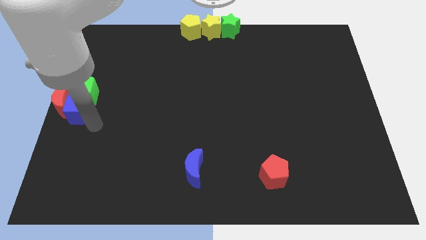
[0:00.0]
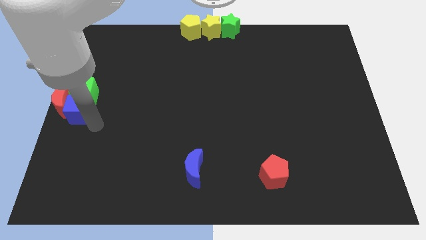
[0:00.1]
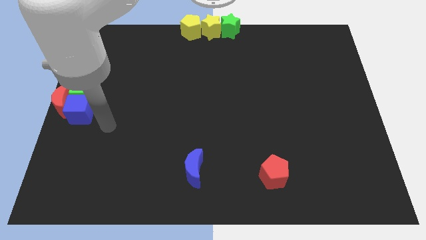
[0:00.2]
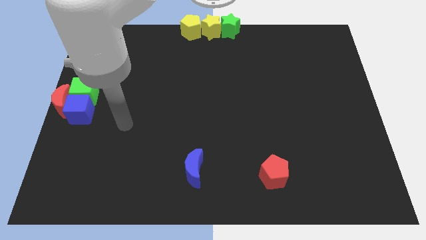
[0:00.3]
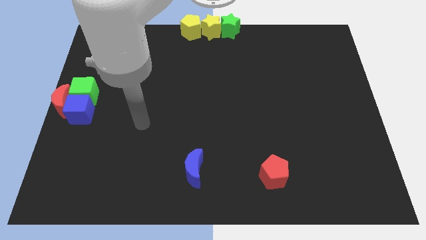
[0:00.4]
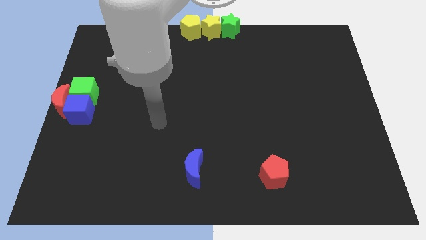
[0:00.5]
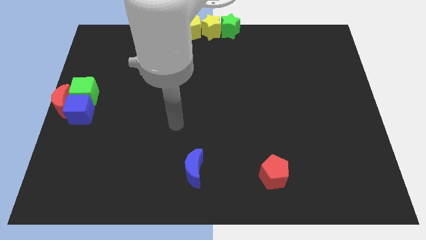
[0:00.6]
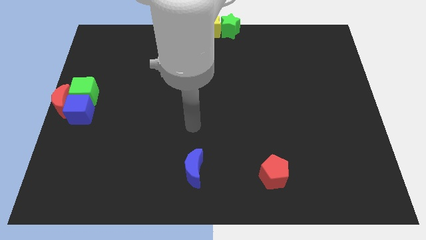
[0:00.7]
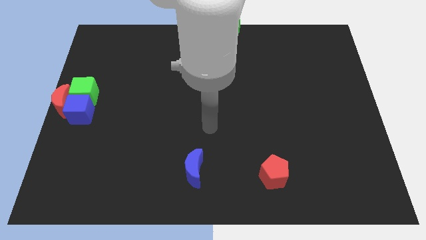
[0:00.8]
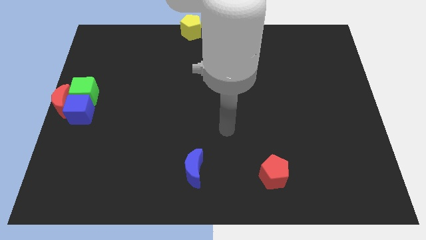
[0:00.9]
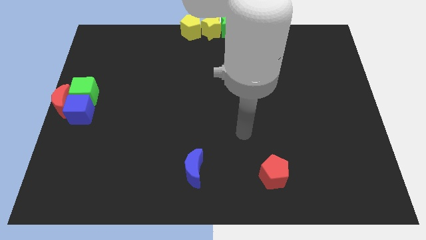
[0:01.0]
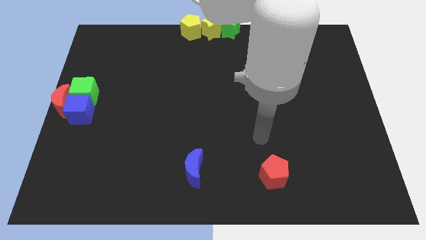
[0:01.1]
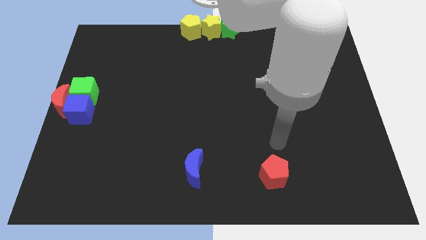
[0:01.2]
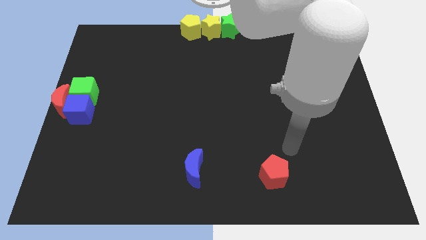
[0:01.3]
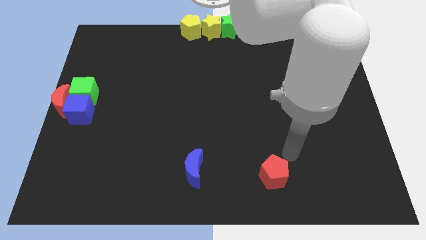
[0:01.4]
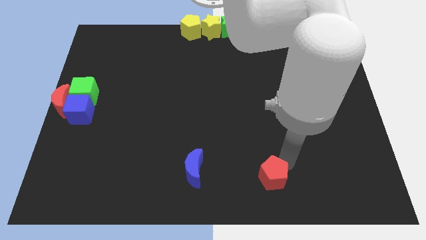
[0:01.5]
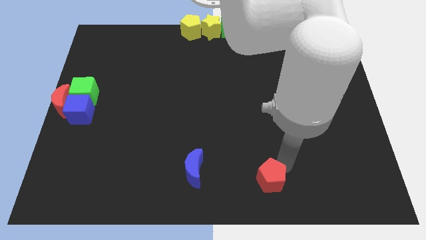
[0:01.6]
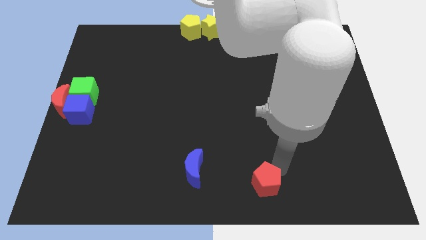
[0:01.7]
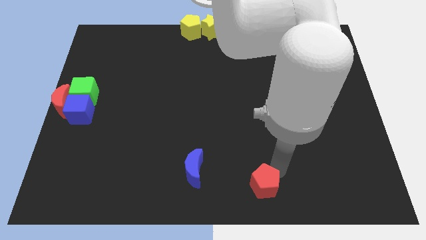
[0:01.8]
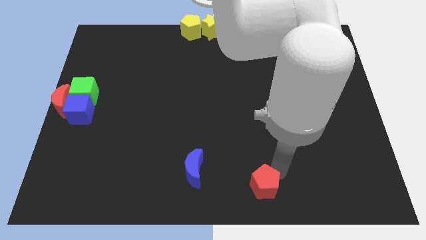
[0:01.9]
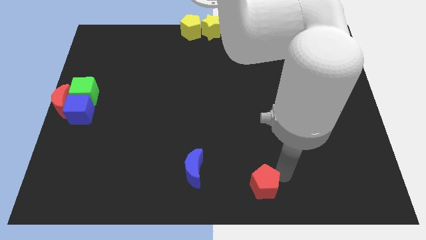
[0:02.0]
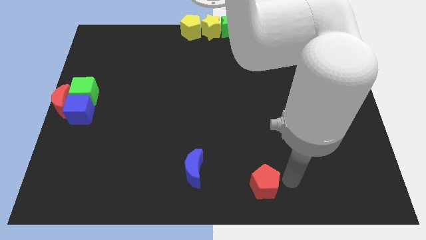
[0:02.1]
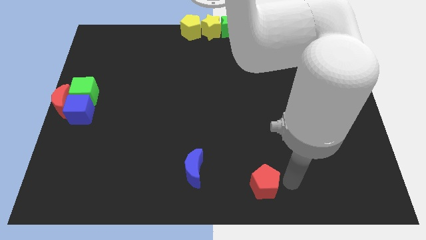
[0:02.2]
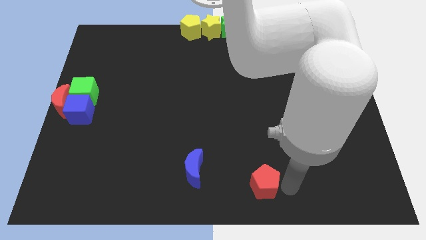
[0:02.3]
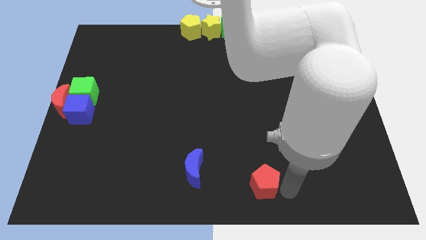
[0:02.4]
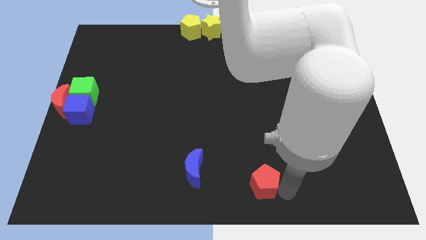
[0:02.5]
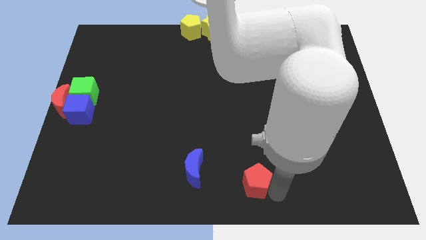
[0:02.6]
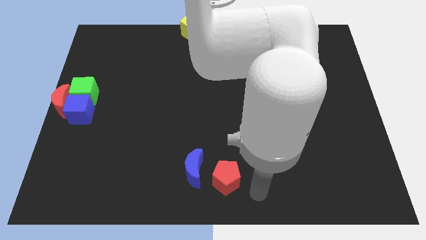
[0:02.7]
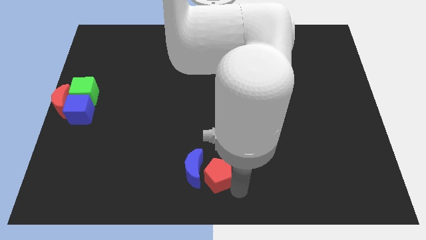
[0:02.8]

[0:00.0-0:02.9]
place the red pentagon near to the bottom center of the board

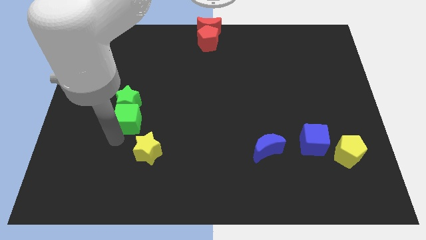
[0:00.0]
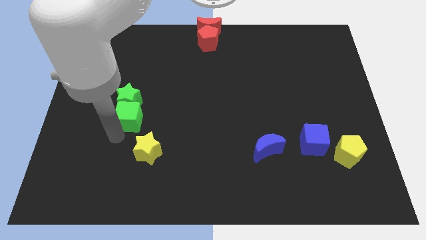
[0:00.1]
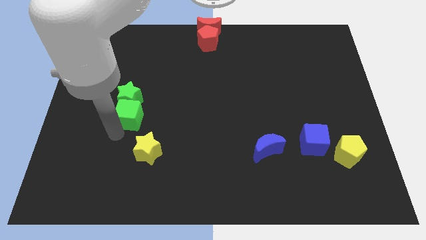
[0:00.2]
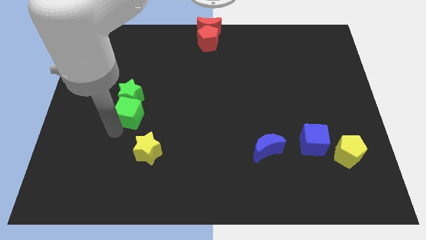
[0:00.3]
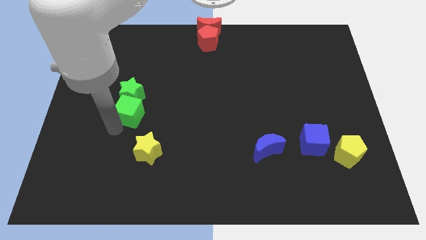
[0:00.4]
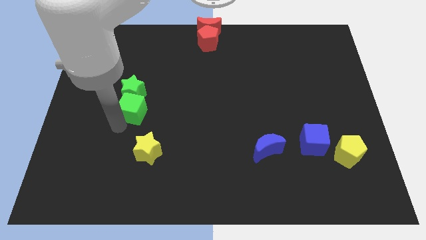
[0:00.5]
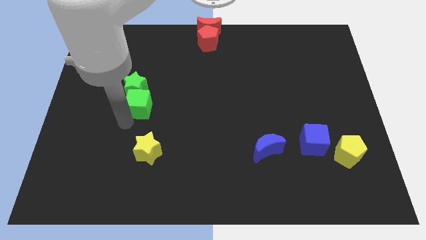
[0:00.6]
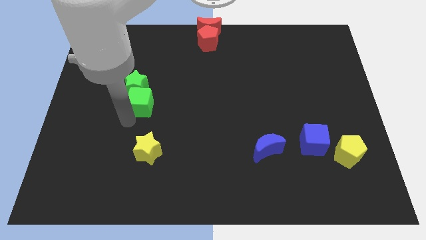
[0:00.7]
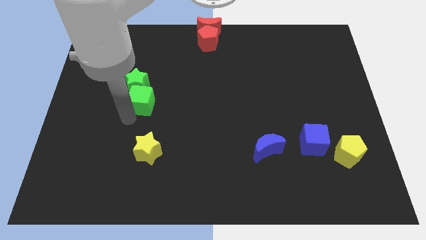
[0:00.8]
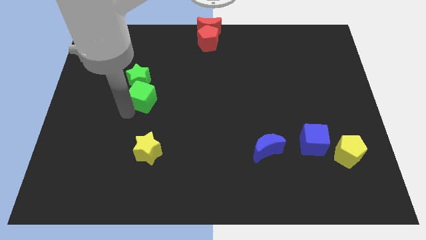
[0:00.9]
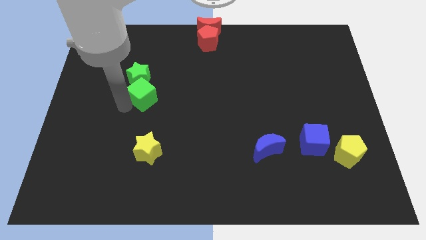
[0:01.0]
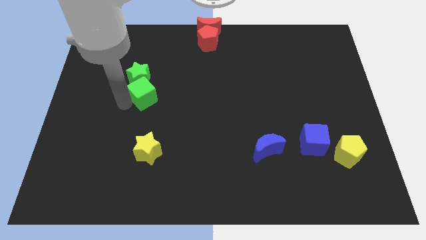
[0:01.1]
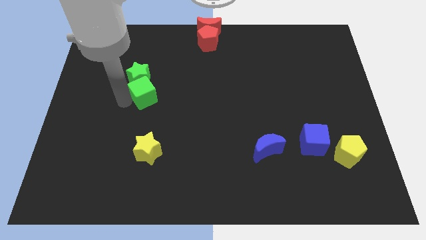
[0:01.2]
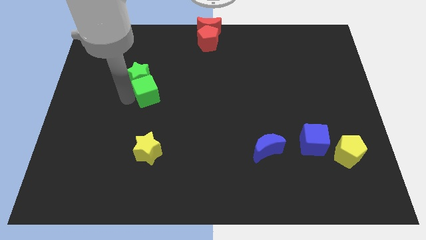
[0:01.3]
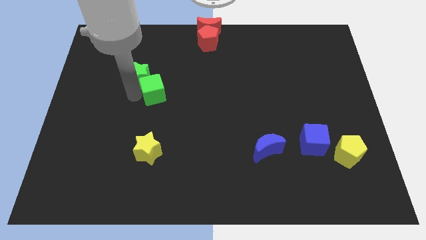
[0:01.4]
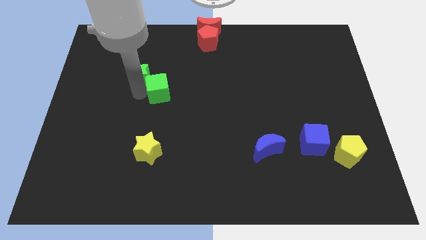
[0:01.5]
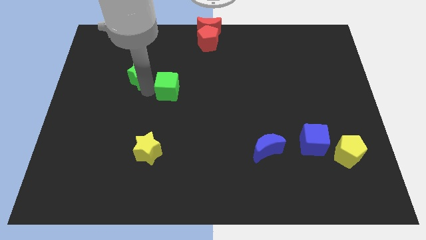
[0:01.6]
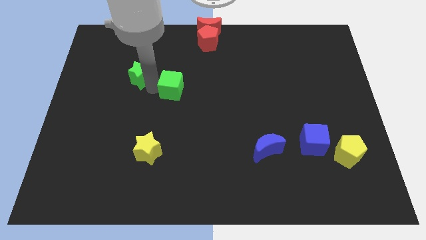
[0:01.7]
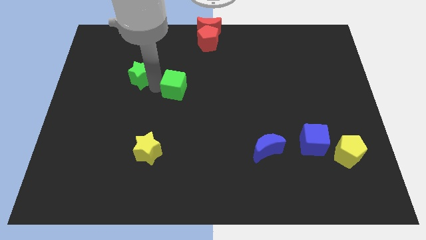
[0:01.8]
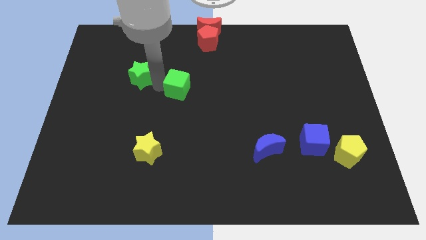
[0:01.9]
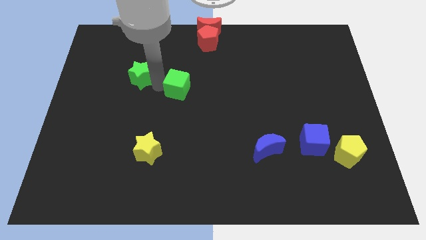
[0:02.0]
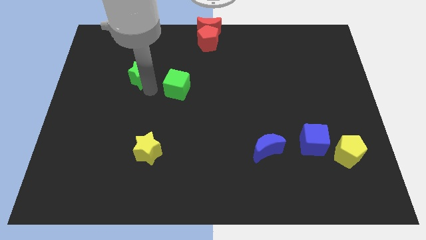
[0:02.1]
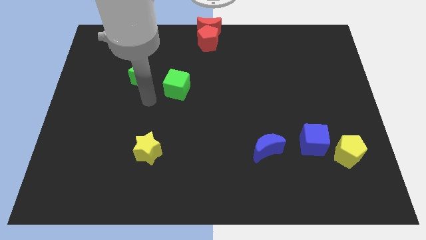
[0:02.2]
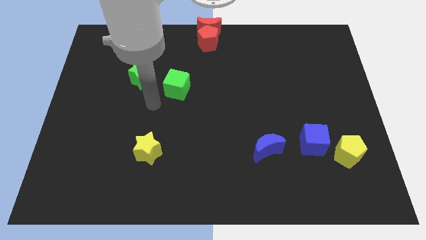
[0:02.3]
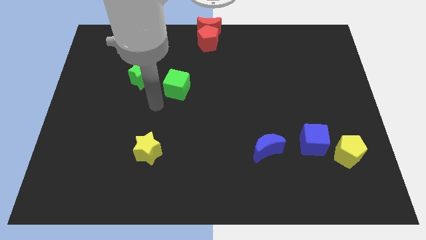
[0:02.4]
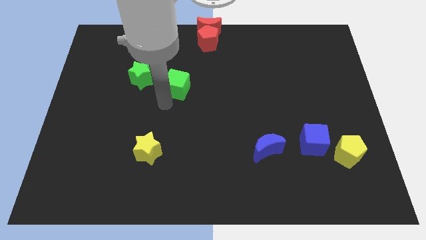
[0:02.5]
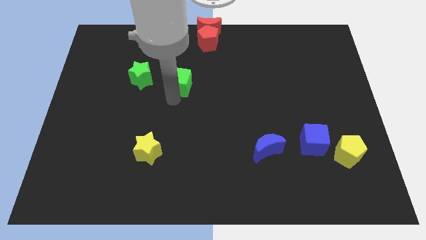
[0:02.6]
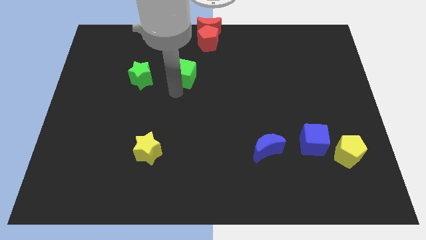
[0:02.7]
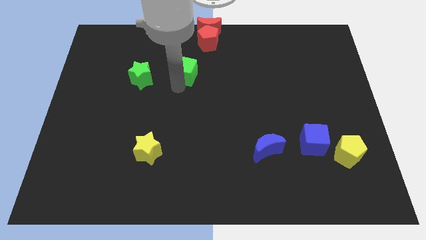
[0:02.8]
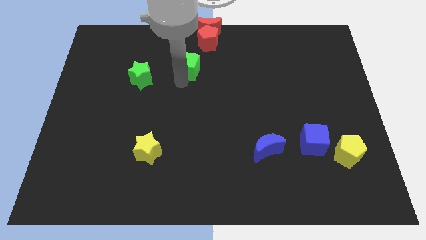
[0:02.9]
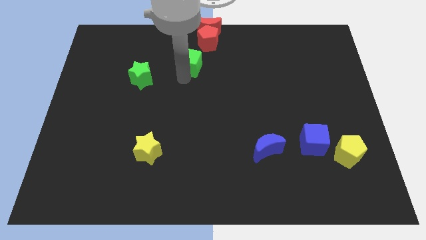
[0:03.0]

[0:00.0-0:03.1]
separate the green cube from the green star

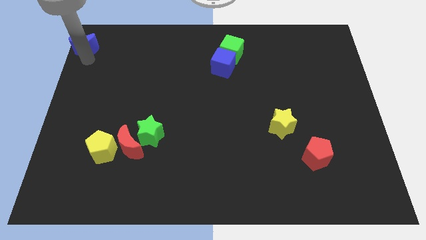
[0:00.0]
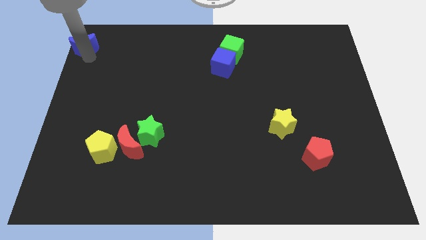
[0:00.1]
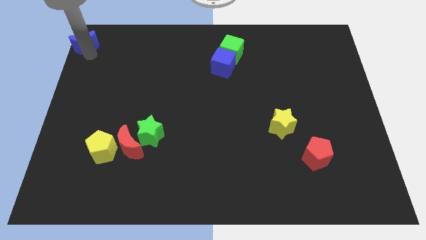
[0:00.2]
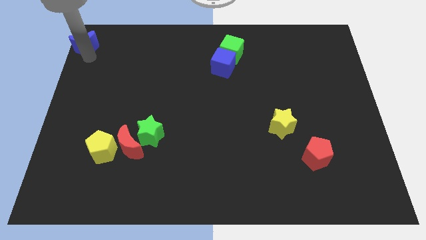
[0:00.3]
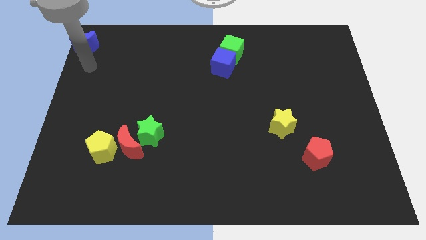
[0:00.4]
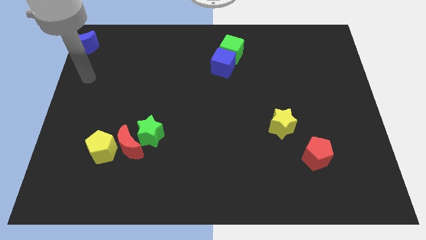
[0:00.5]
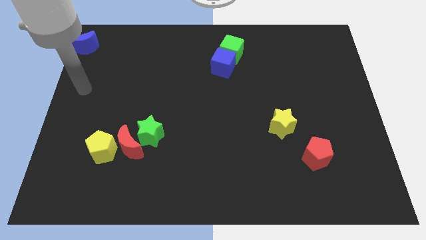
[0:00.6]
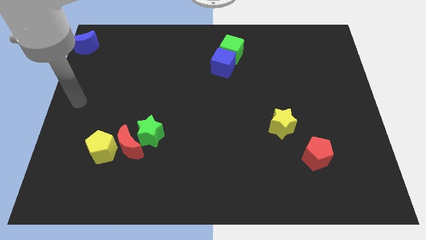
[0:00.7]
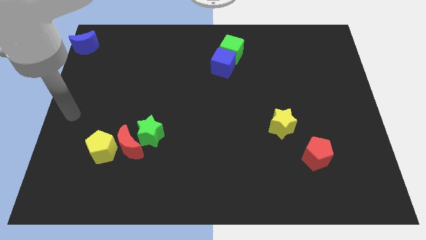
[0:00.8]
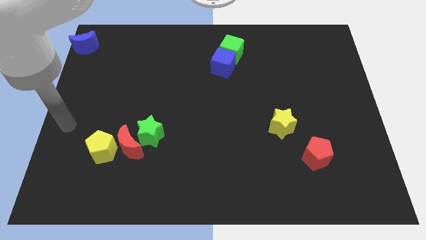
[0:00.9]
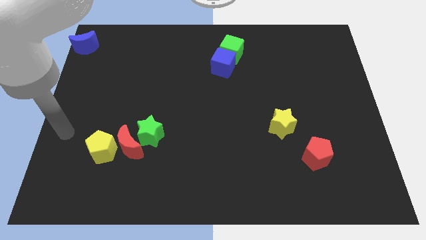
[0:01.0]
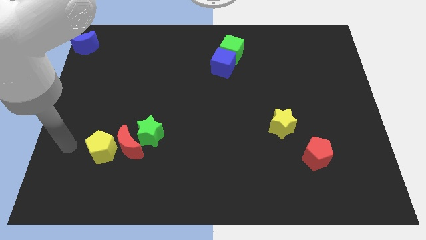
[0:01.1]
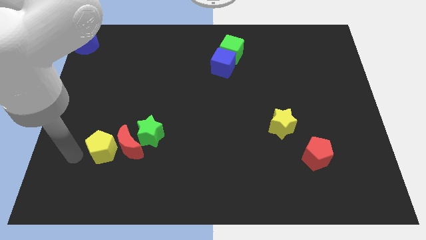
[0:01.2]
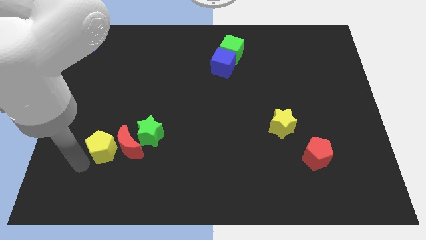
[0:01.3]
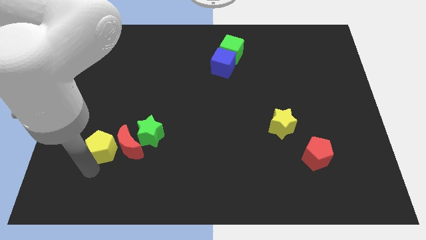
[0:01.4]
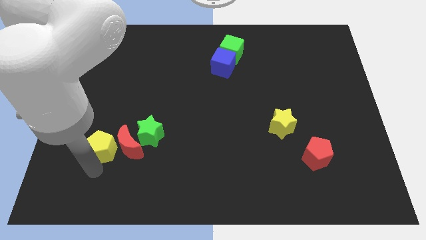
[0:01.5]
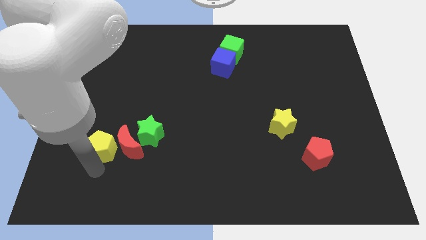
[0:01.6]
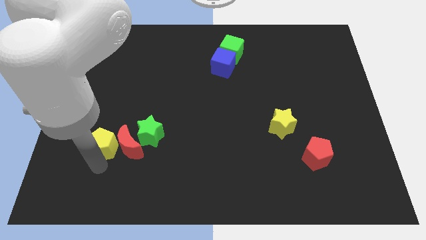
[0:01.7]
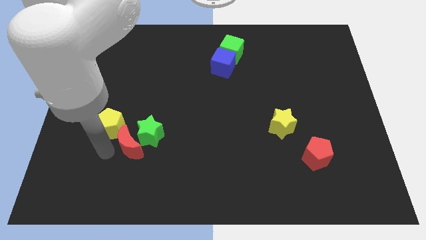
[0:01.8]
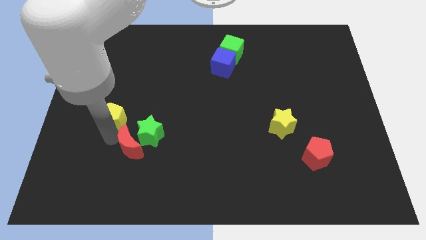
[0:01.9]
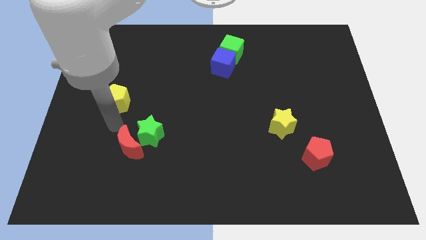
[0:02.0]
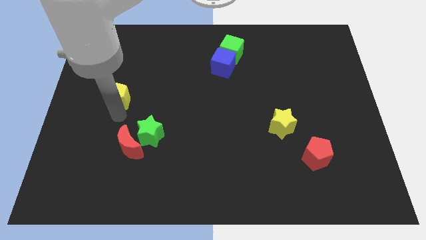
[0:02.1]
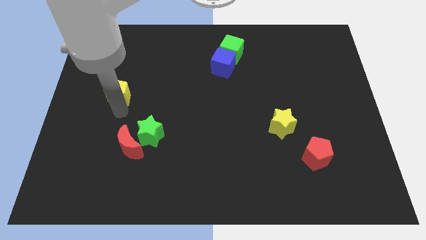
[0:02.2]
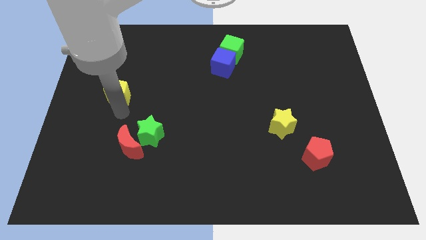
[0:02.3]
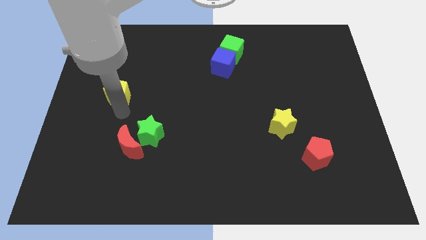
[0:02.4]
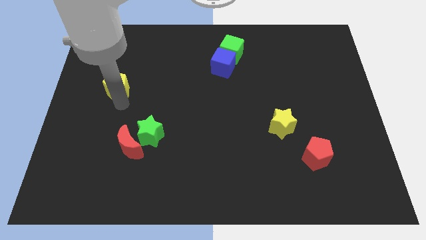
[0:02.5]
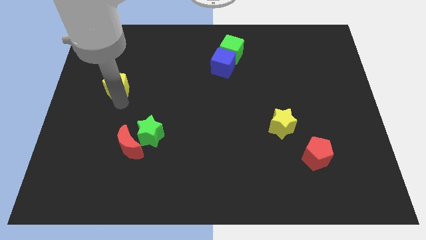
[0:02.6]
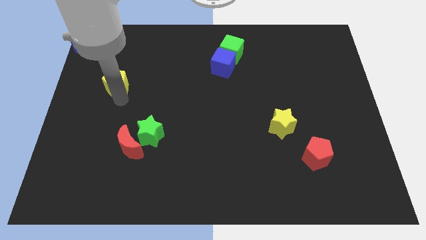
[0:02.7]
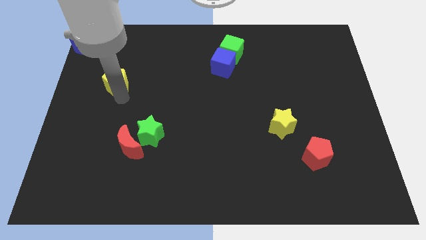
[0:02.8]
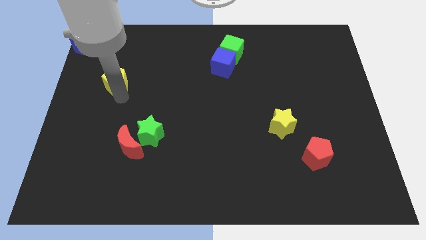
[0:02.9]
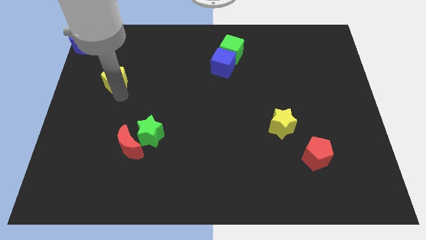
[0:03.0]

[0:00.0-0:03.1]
move the yellow pentagon towards the top left corner
